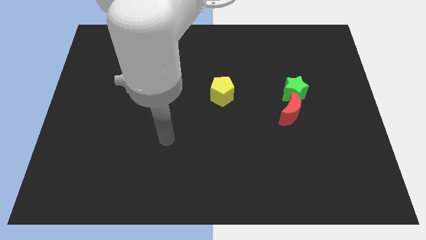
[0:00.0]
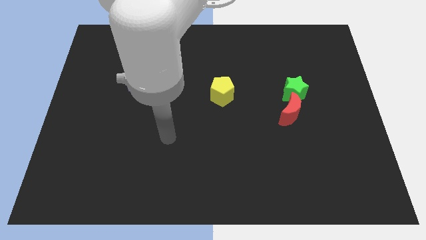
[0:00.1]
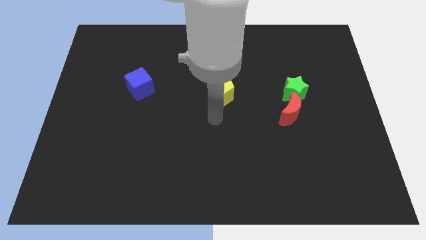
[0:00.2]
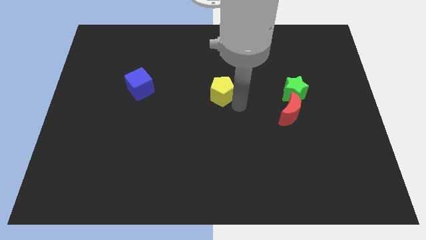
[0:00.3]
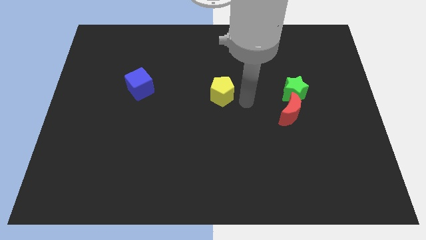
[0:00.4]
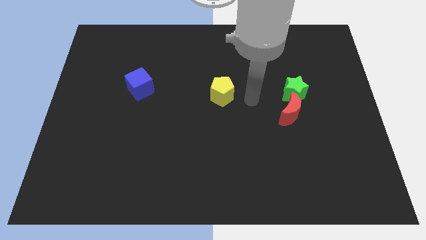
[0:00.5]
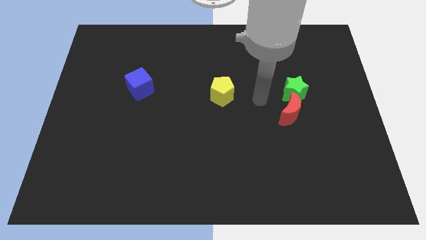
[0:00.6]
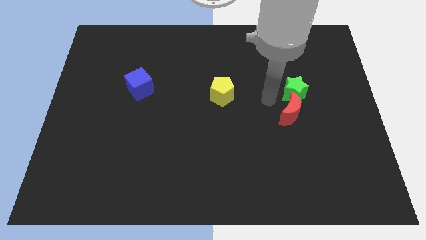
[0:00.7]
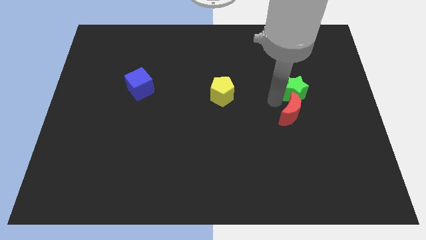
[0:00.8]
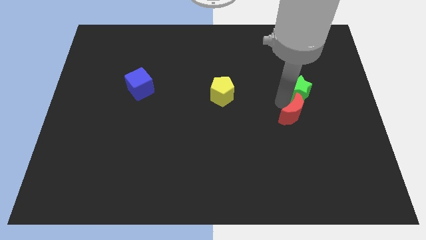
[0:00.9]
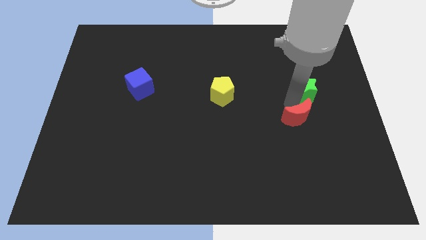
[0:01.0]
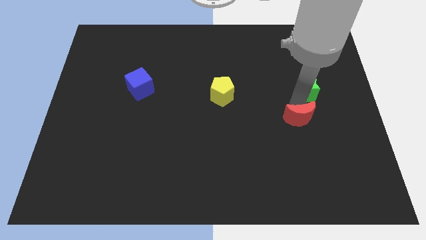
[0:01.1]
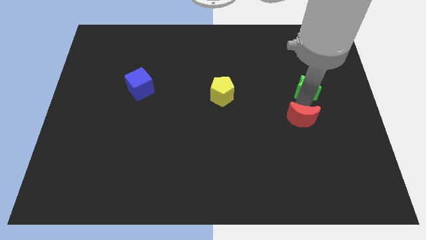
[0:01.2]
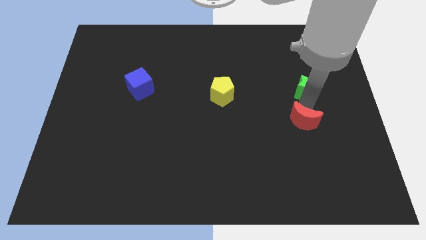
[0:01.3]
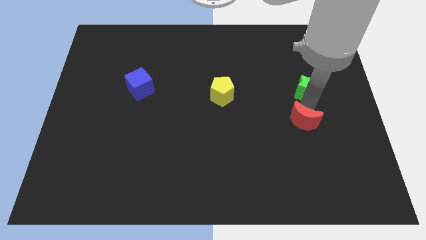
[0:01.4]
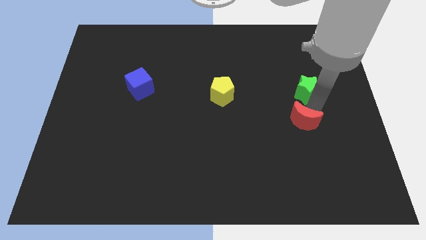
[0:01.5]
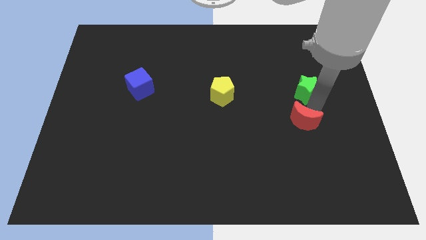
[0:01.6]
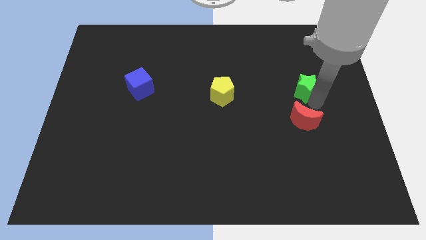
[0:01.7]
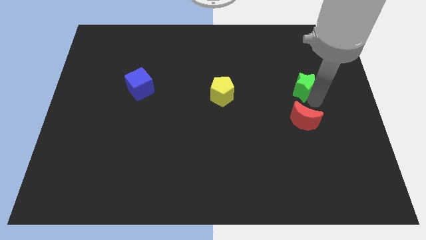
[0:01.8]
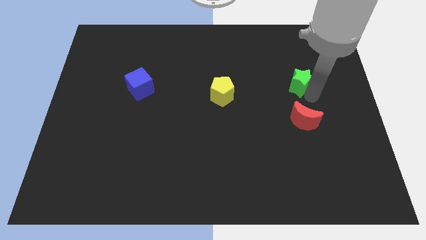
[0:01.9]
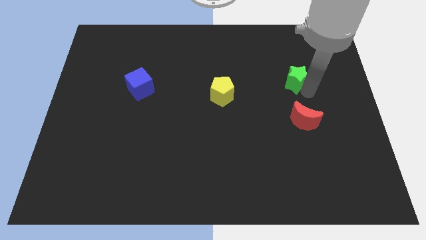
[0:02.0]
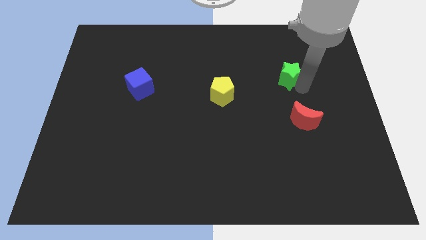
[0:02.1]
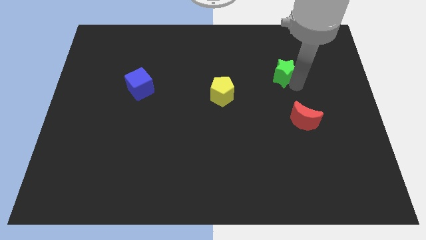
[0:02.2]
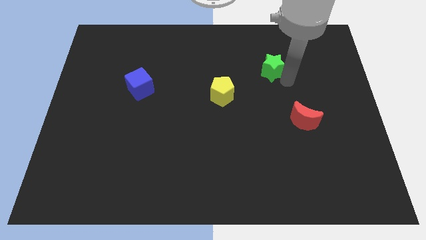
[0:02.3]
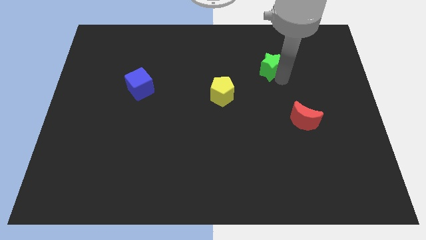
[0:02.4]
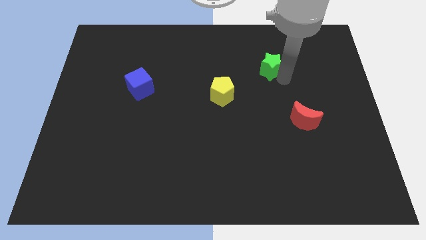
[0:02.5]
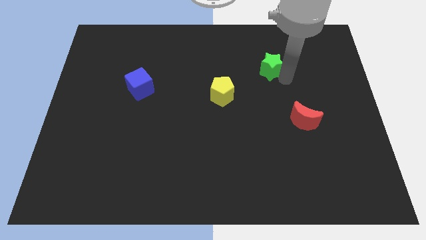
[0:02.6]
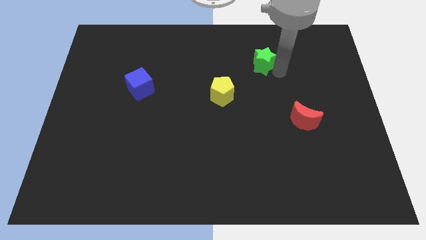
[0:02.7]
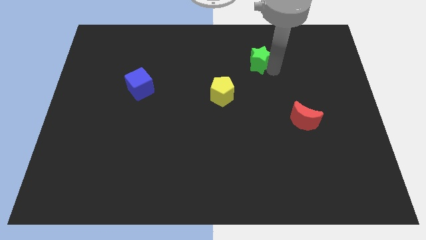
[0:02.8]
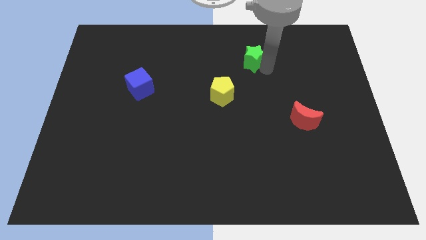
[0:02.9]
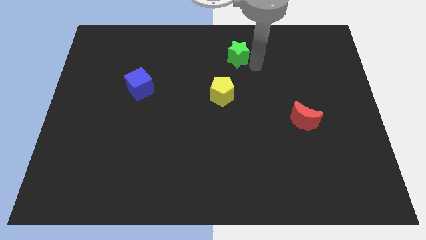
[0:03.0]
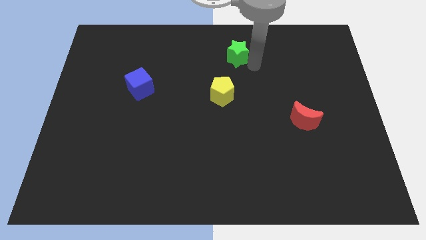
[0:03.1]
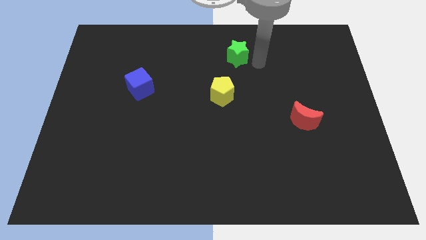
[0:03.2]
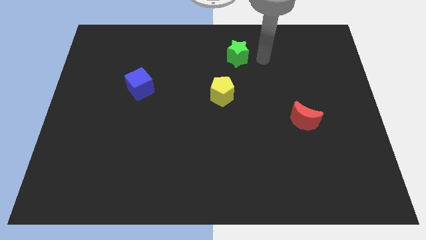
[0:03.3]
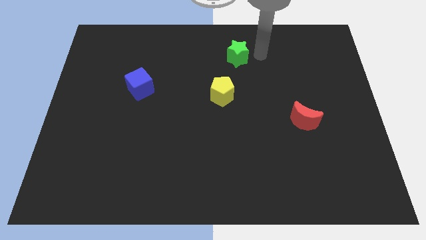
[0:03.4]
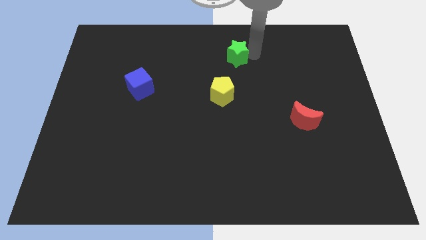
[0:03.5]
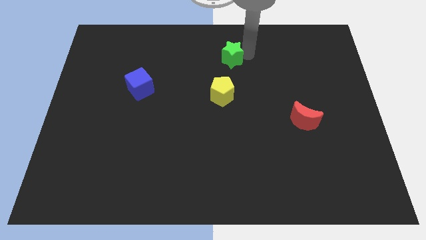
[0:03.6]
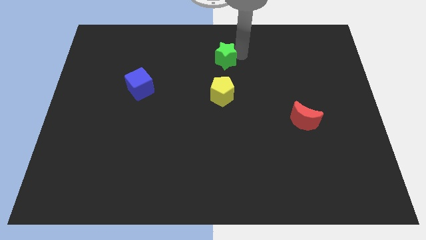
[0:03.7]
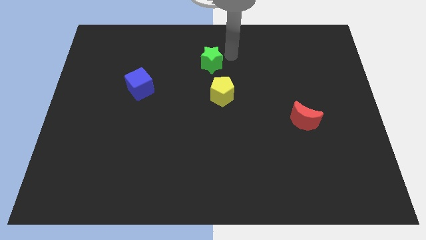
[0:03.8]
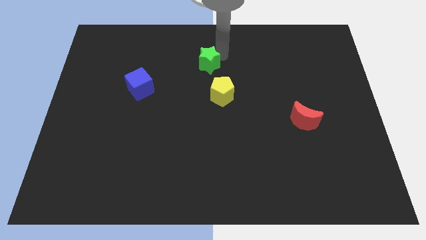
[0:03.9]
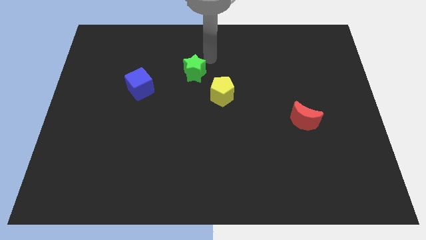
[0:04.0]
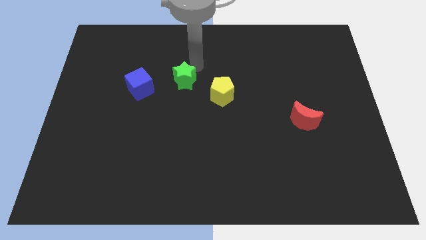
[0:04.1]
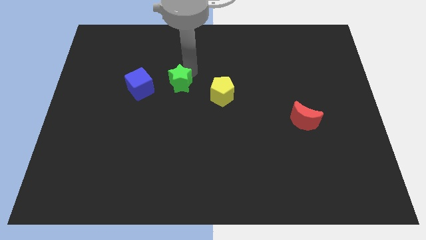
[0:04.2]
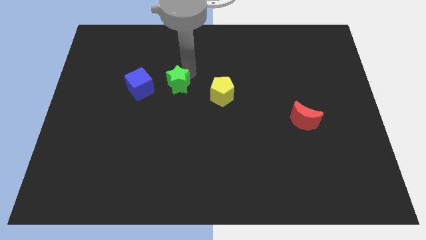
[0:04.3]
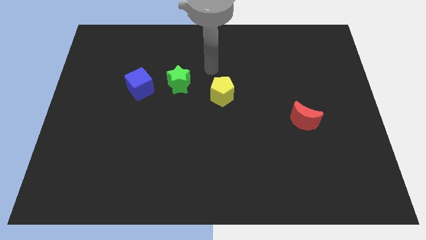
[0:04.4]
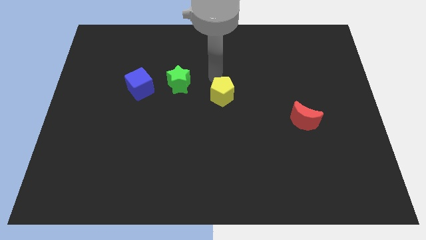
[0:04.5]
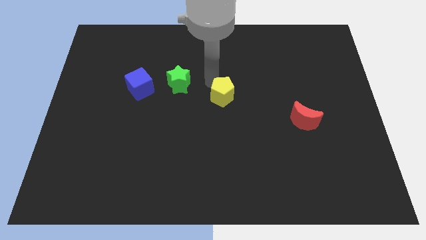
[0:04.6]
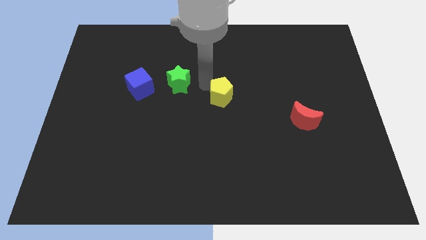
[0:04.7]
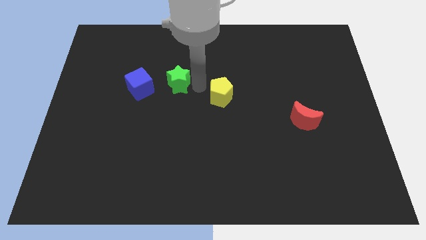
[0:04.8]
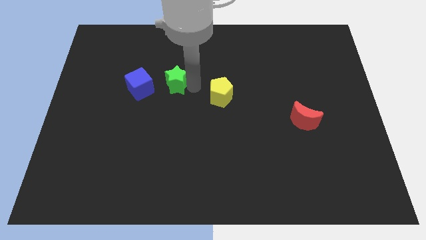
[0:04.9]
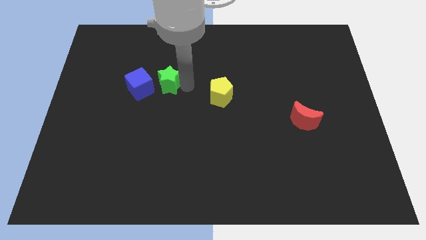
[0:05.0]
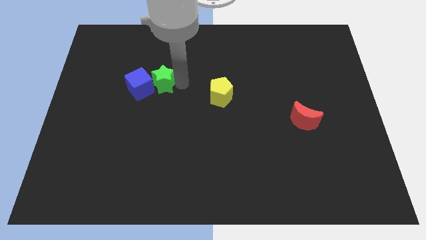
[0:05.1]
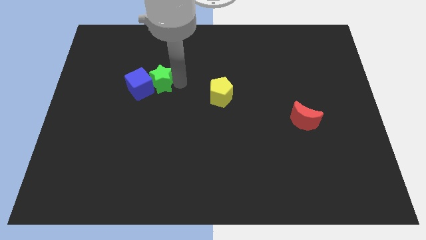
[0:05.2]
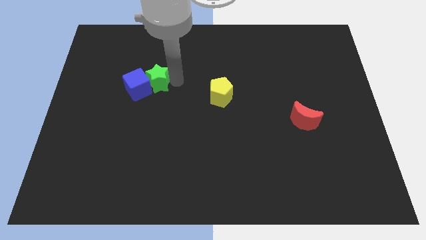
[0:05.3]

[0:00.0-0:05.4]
put the green star close to the cube

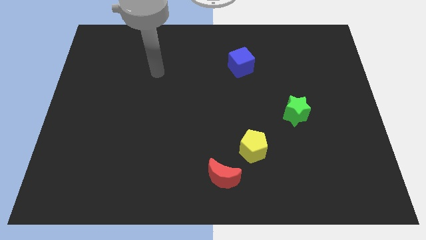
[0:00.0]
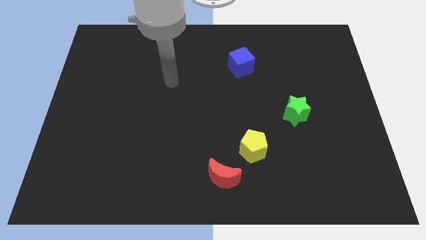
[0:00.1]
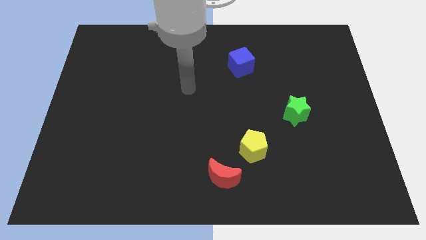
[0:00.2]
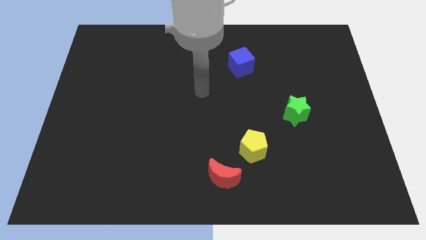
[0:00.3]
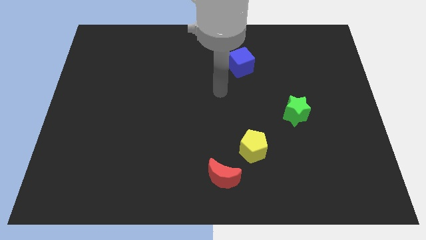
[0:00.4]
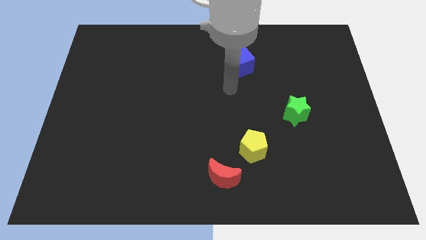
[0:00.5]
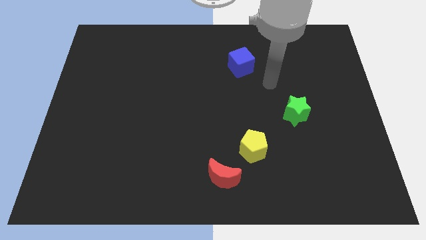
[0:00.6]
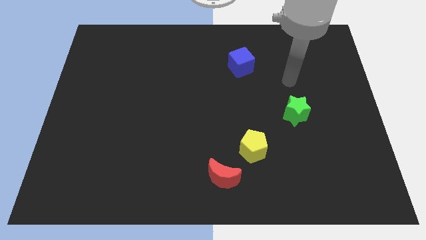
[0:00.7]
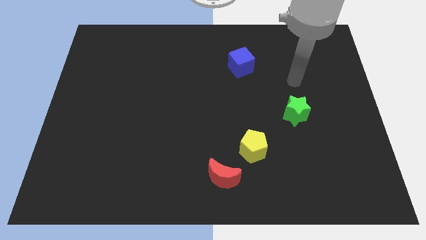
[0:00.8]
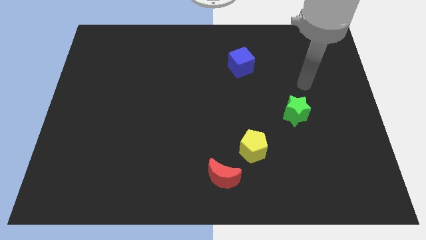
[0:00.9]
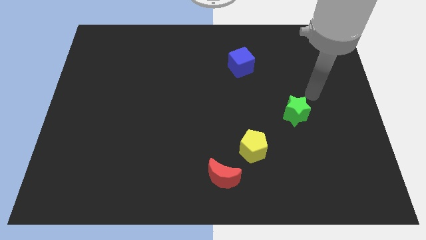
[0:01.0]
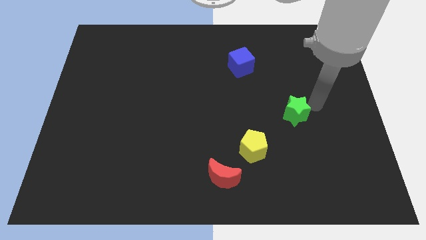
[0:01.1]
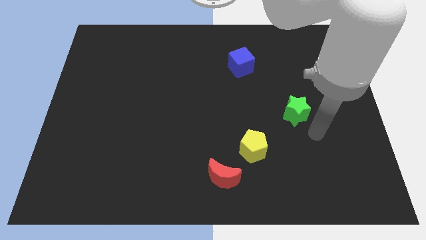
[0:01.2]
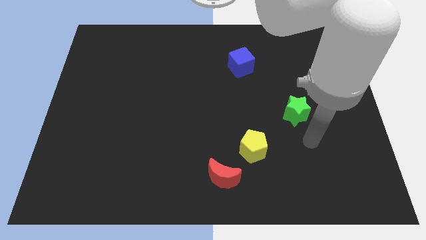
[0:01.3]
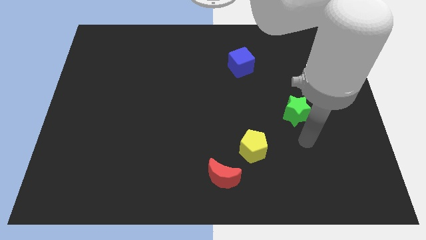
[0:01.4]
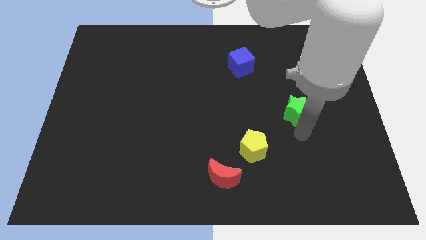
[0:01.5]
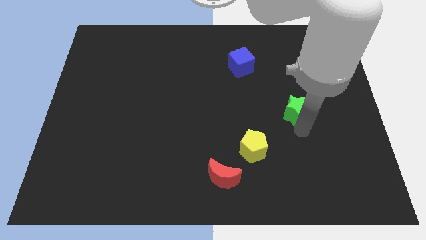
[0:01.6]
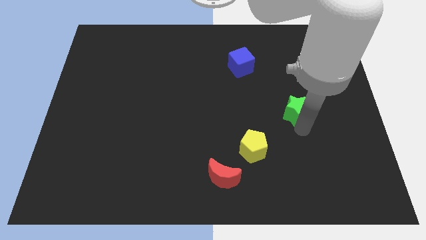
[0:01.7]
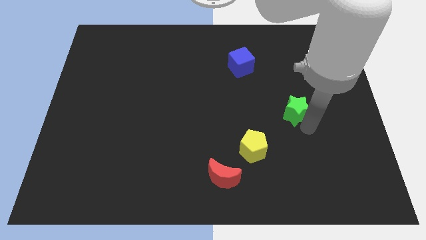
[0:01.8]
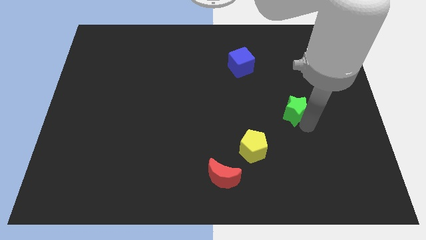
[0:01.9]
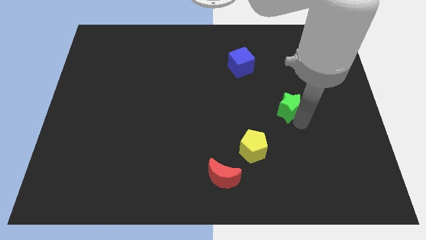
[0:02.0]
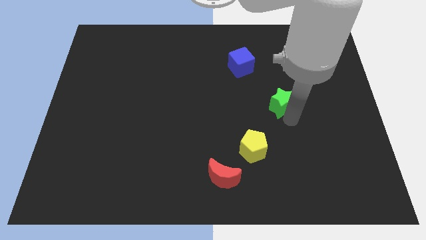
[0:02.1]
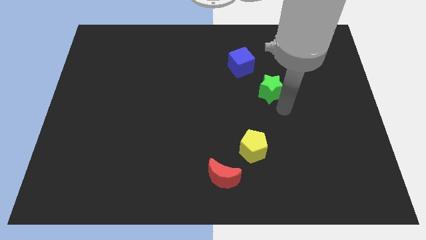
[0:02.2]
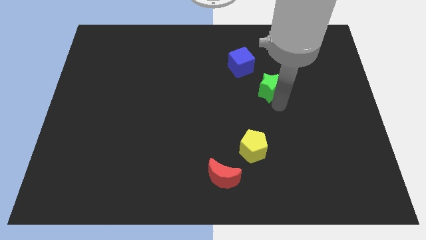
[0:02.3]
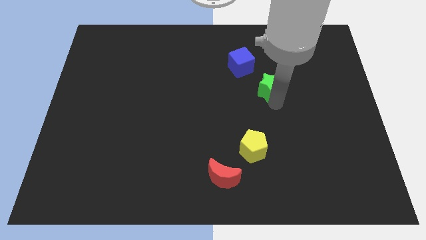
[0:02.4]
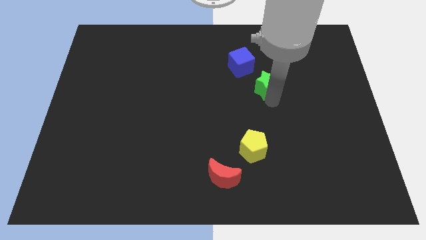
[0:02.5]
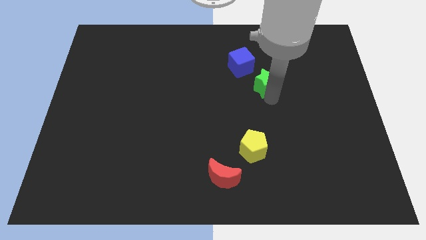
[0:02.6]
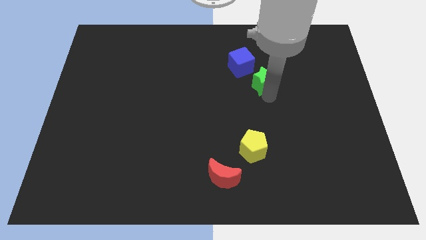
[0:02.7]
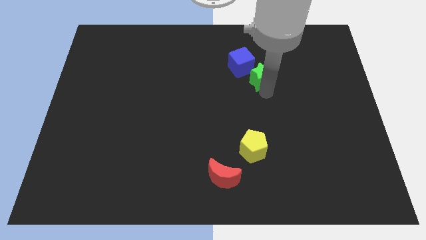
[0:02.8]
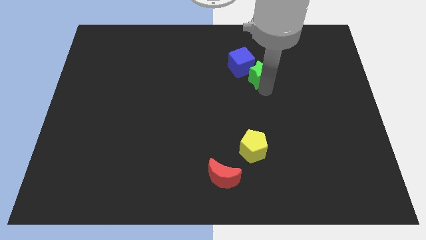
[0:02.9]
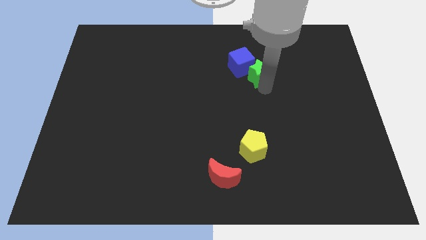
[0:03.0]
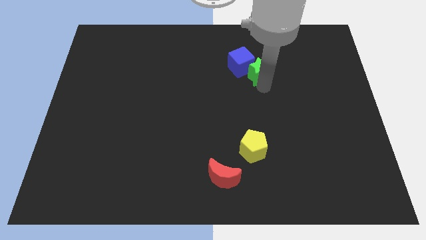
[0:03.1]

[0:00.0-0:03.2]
push the star next to the blue cube
